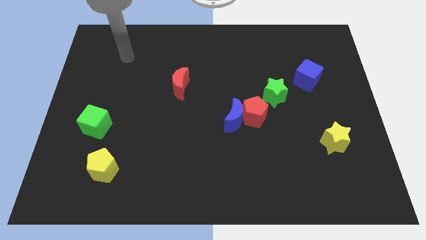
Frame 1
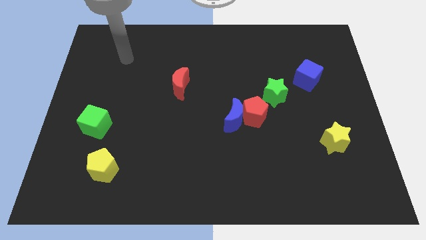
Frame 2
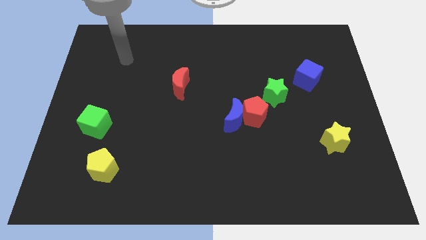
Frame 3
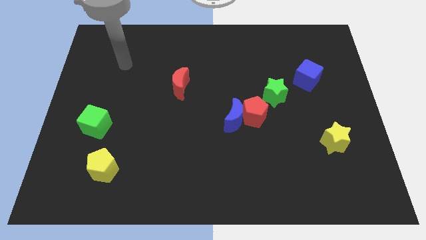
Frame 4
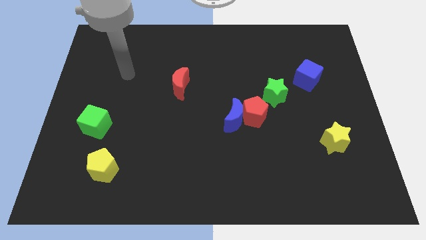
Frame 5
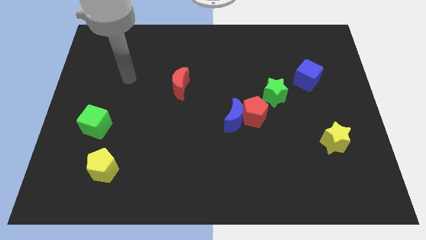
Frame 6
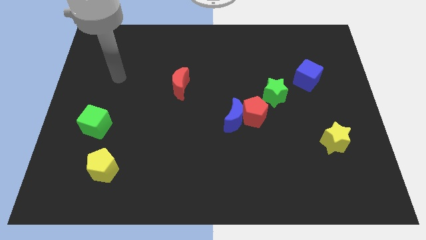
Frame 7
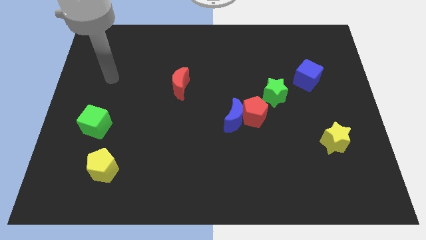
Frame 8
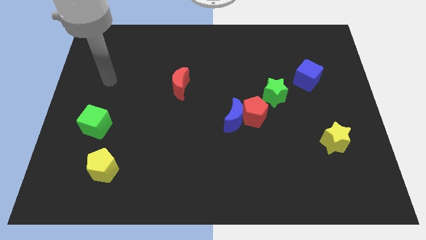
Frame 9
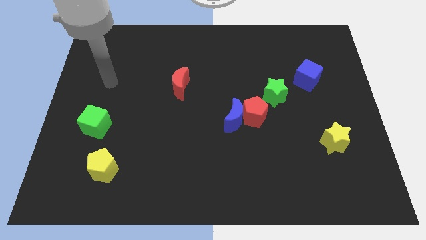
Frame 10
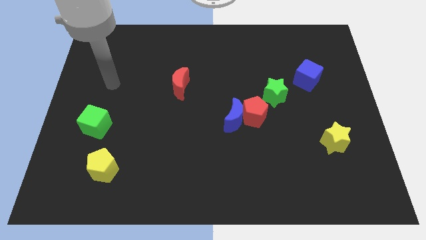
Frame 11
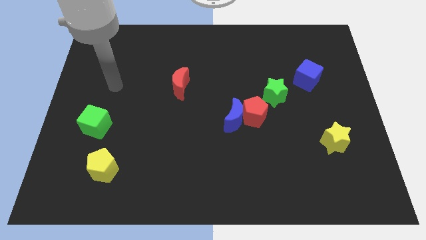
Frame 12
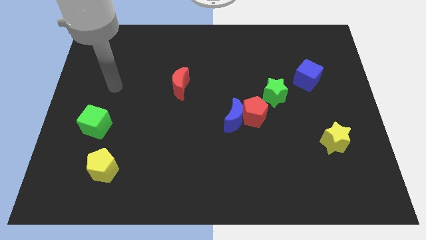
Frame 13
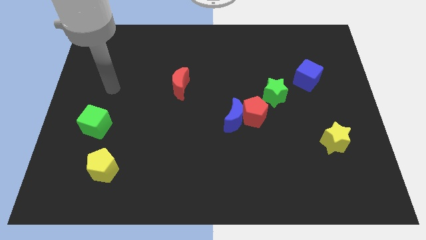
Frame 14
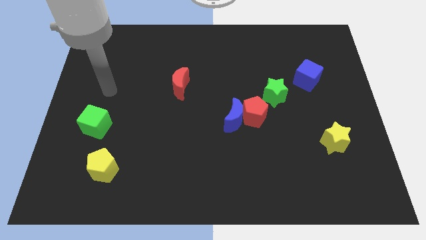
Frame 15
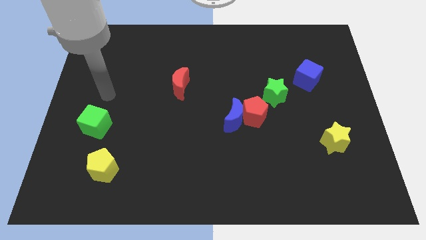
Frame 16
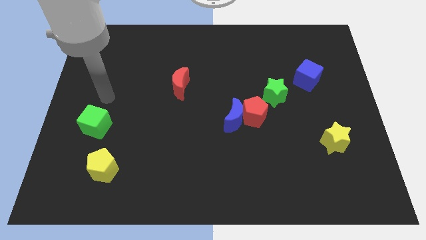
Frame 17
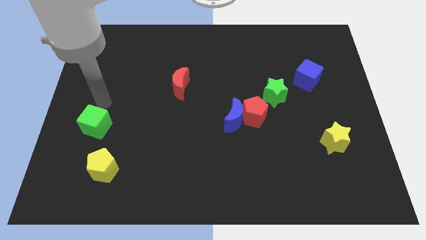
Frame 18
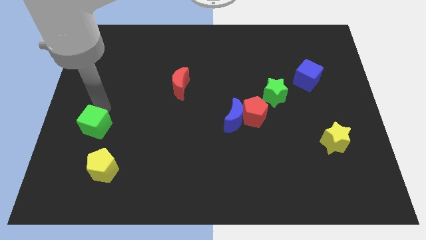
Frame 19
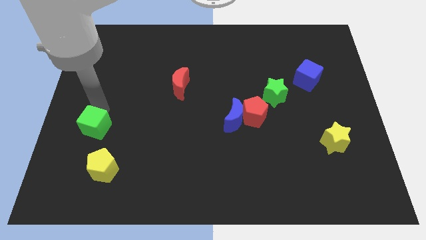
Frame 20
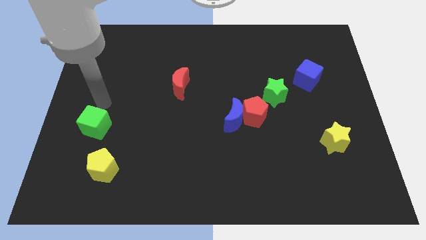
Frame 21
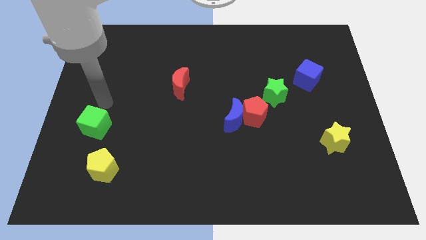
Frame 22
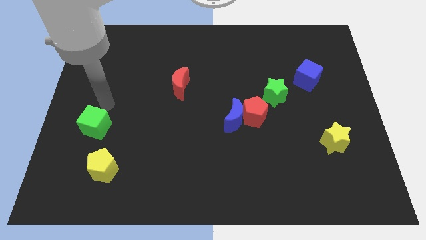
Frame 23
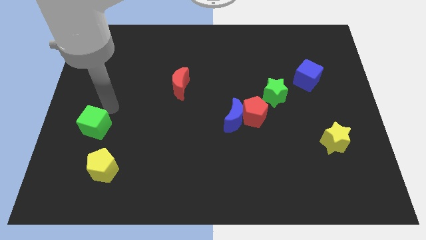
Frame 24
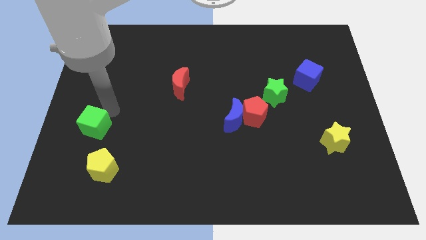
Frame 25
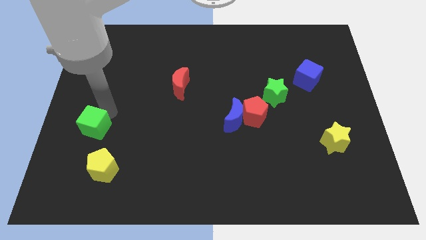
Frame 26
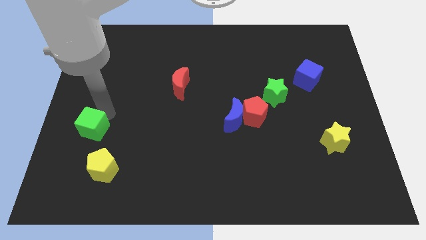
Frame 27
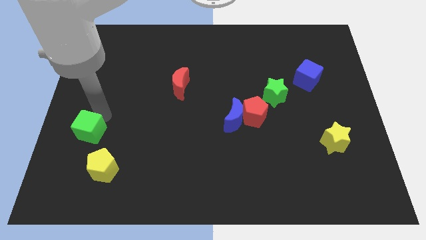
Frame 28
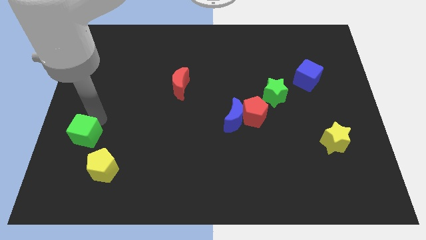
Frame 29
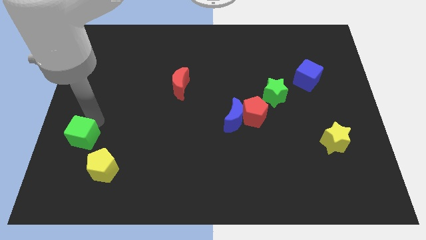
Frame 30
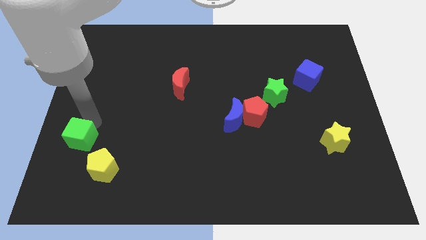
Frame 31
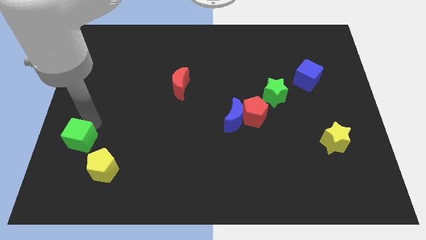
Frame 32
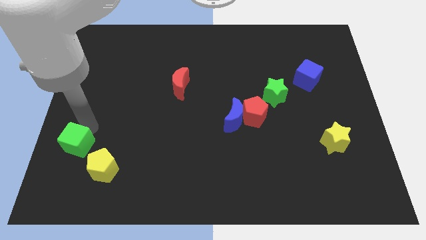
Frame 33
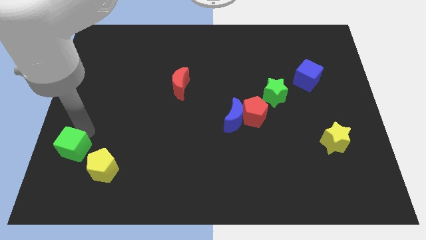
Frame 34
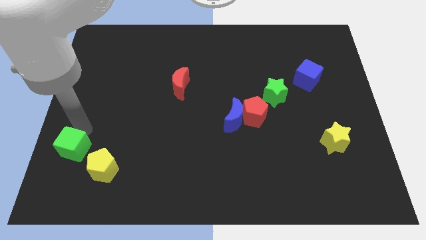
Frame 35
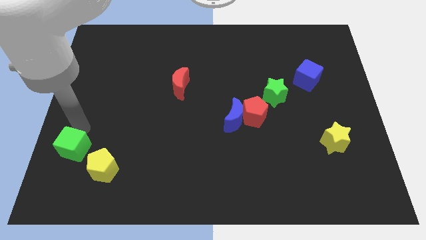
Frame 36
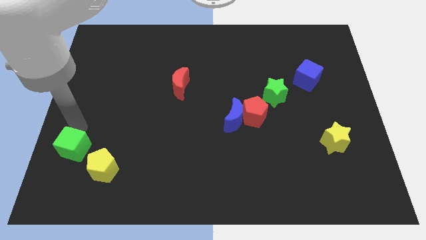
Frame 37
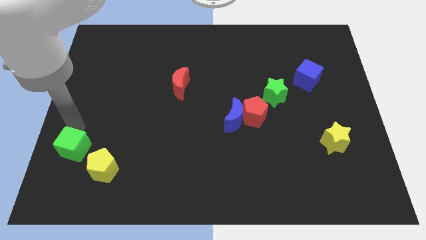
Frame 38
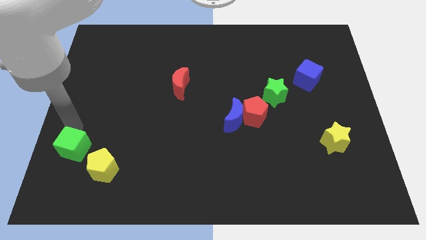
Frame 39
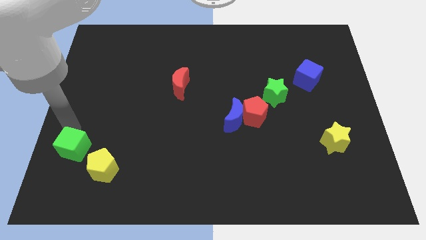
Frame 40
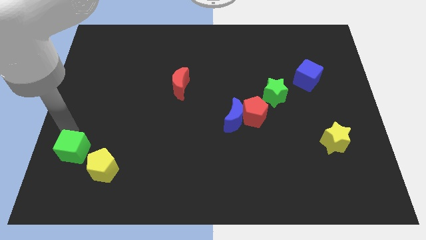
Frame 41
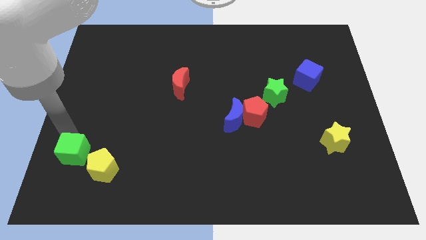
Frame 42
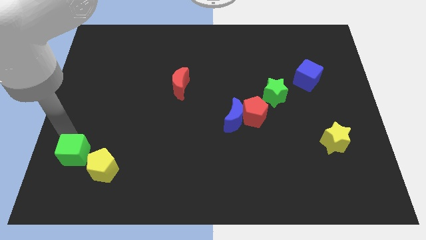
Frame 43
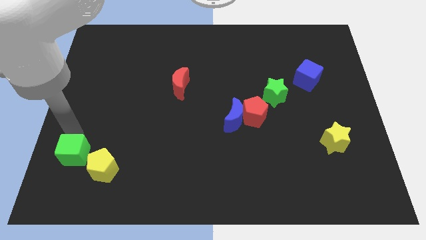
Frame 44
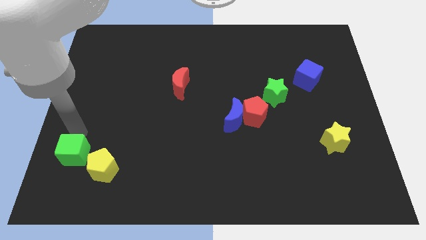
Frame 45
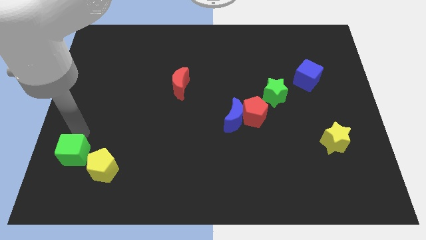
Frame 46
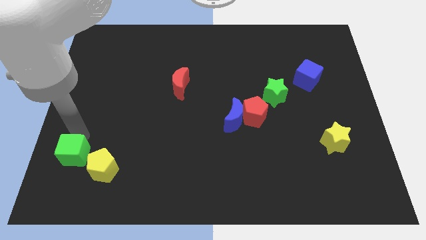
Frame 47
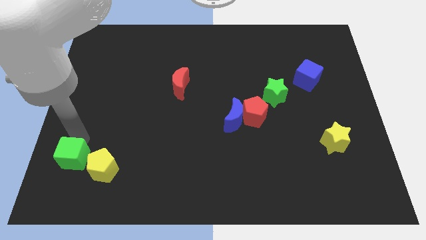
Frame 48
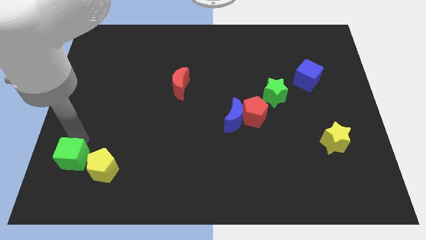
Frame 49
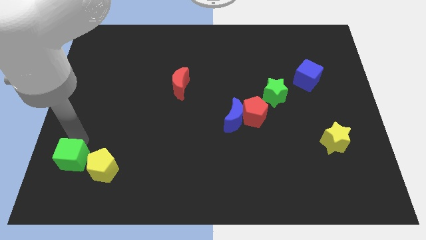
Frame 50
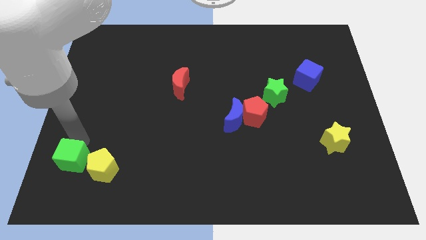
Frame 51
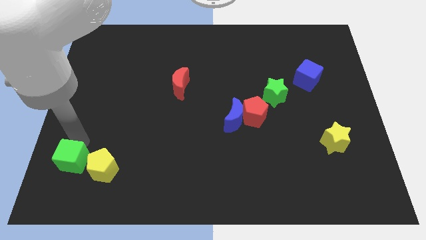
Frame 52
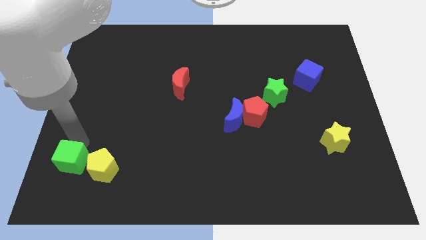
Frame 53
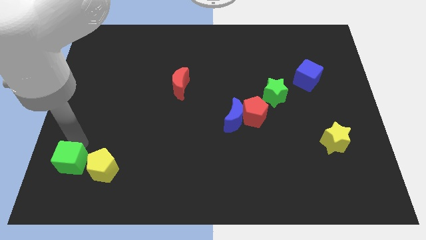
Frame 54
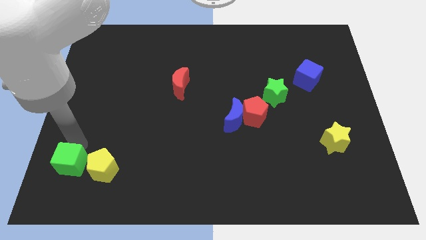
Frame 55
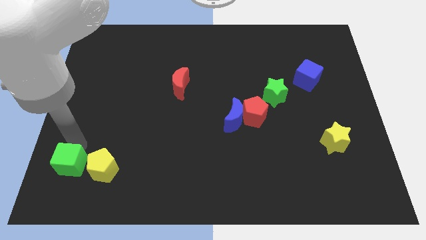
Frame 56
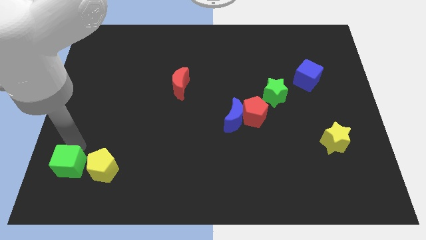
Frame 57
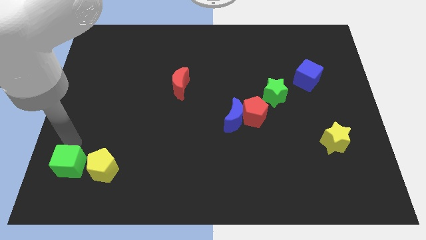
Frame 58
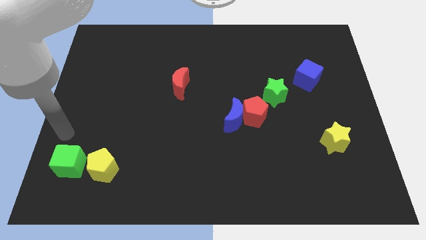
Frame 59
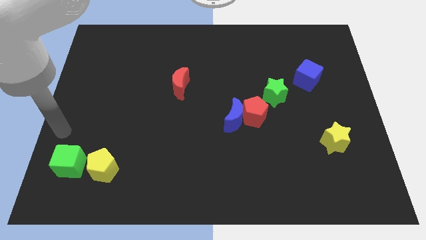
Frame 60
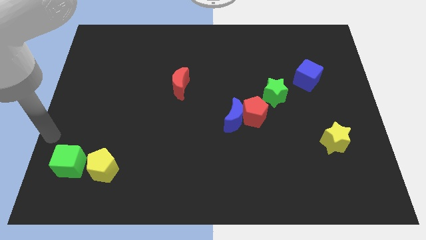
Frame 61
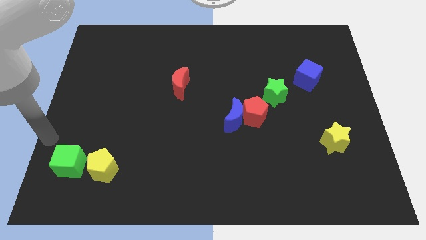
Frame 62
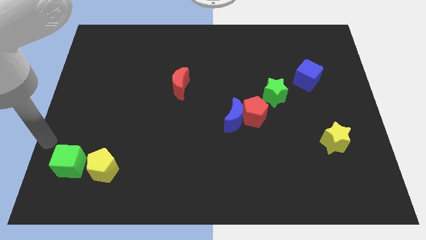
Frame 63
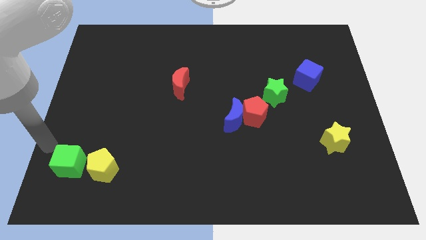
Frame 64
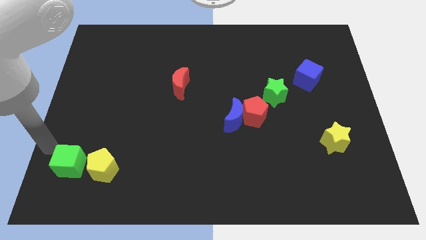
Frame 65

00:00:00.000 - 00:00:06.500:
place the green cube left to the yellow pentagon

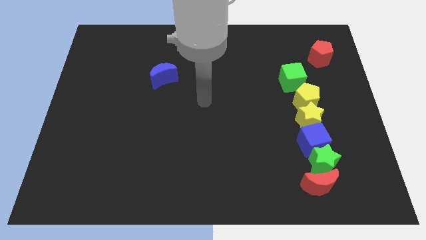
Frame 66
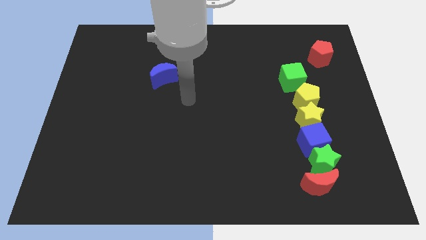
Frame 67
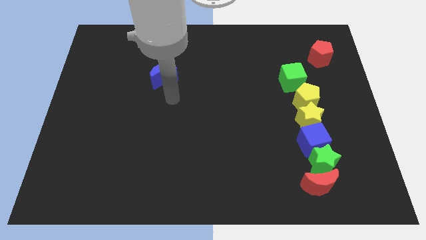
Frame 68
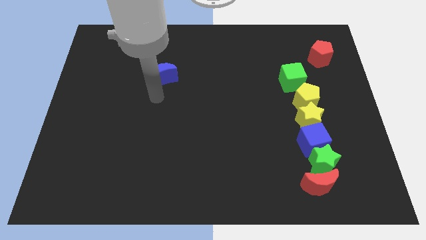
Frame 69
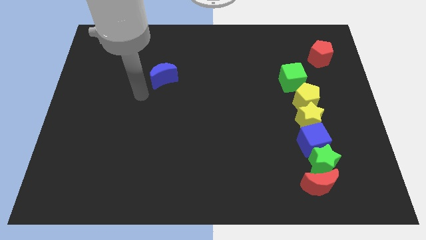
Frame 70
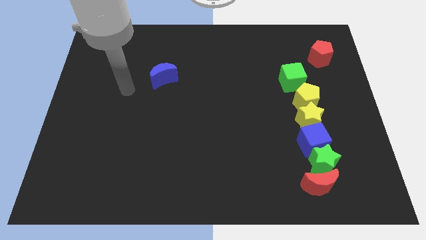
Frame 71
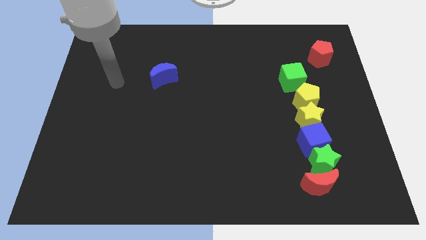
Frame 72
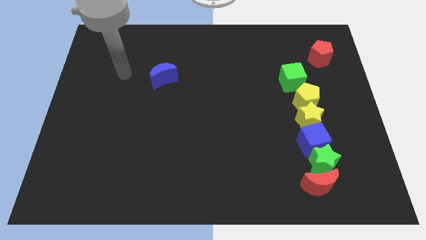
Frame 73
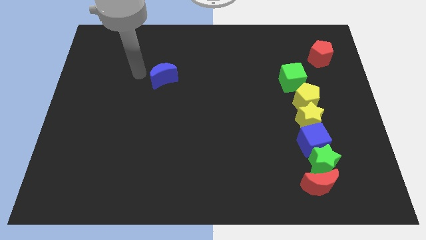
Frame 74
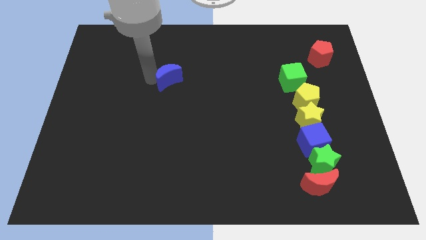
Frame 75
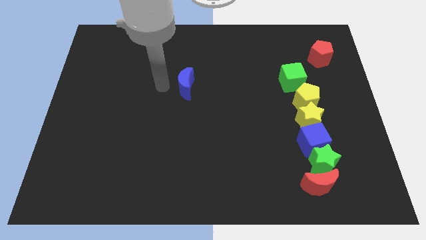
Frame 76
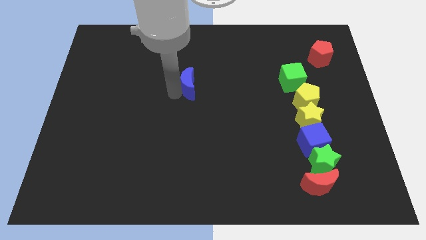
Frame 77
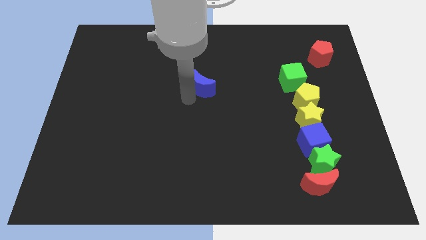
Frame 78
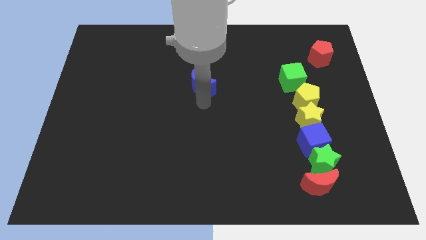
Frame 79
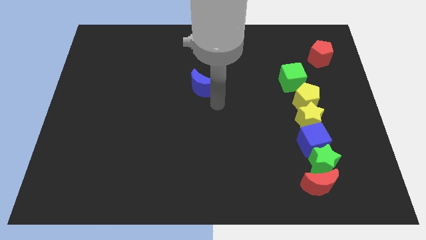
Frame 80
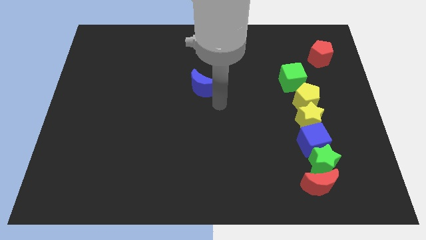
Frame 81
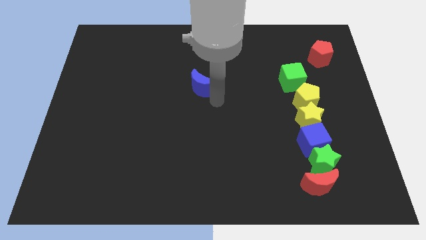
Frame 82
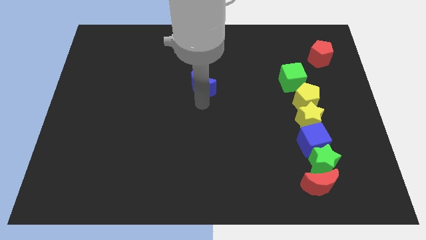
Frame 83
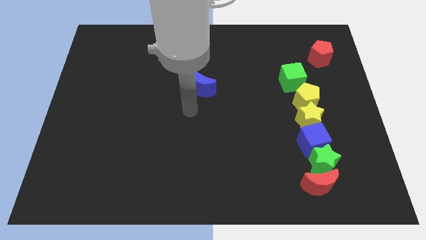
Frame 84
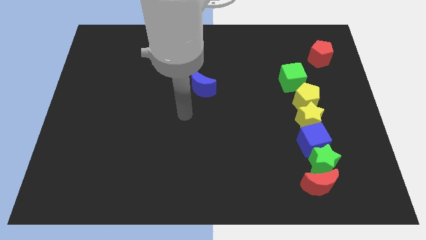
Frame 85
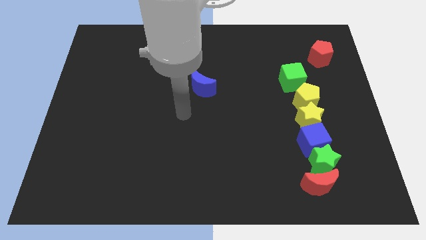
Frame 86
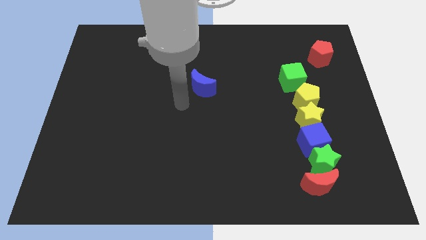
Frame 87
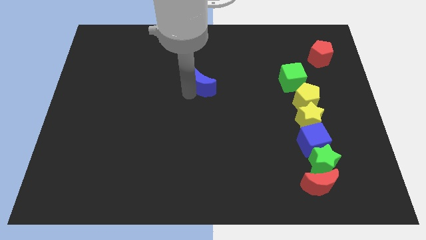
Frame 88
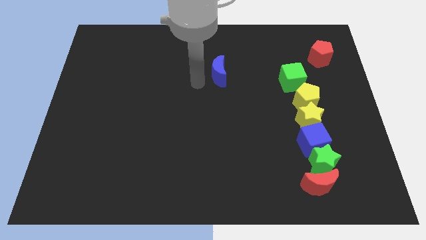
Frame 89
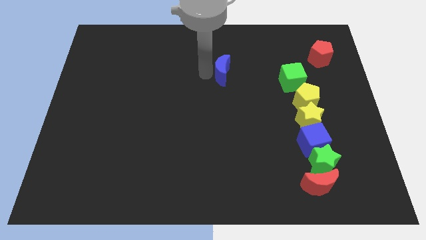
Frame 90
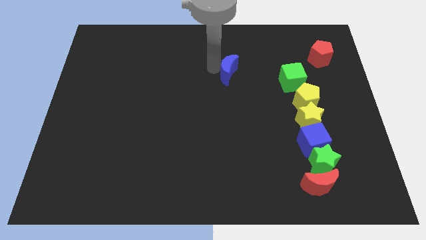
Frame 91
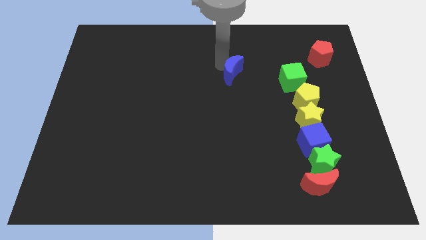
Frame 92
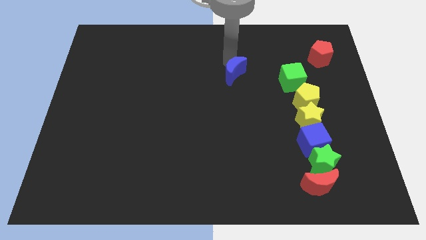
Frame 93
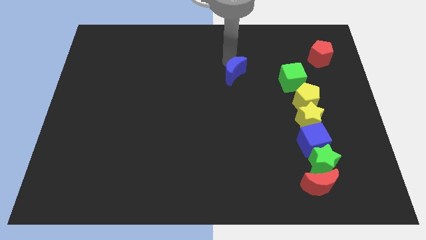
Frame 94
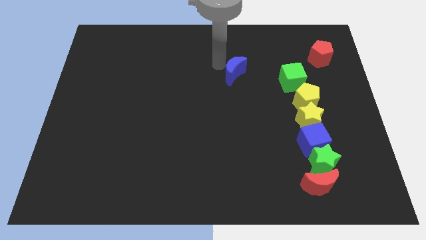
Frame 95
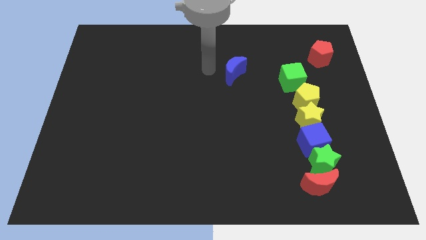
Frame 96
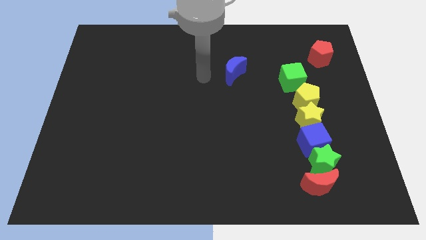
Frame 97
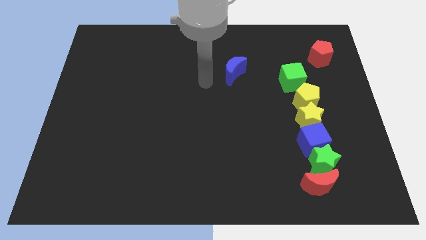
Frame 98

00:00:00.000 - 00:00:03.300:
push the blue moon to the right side of the board
